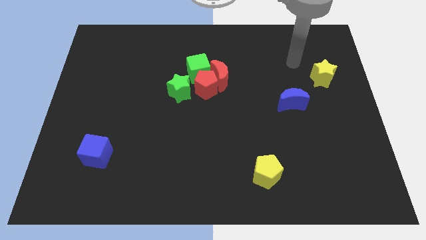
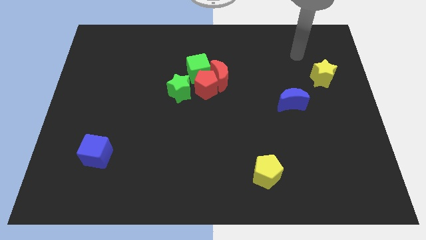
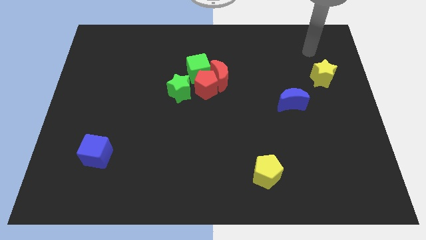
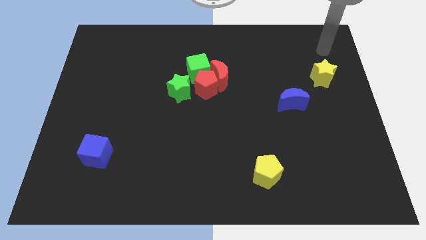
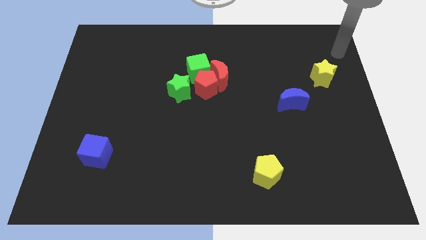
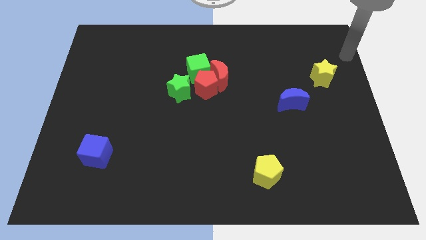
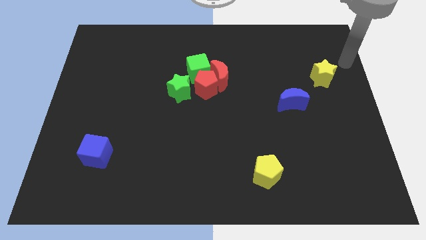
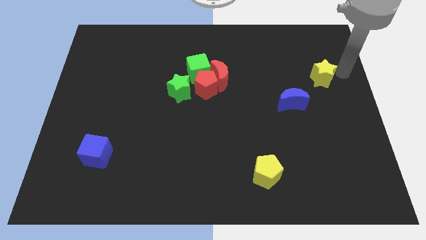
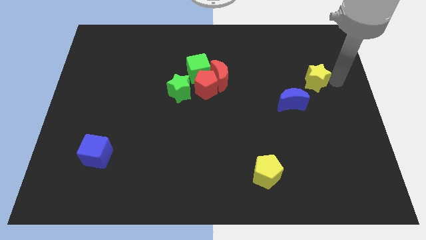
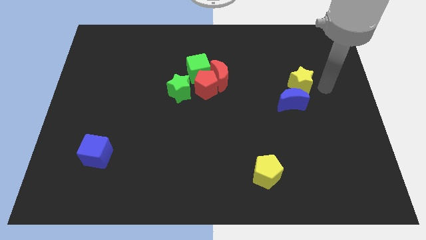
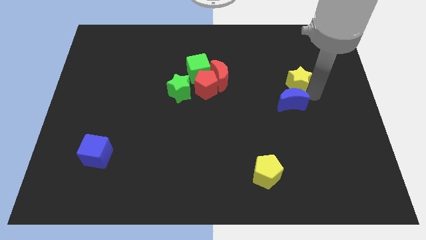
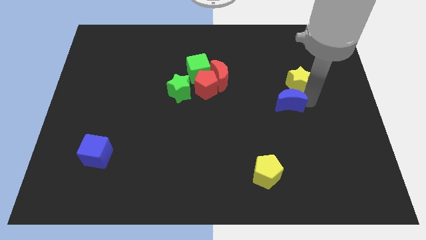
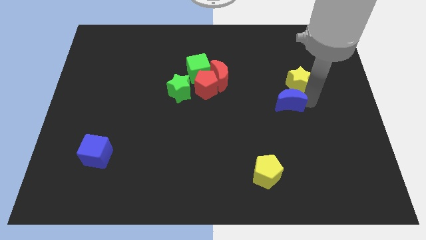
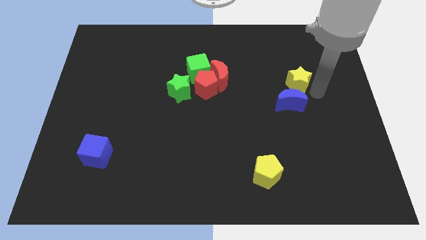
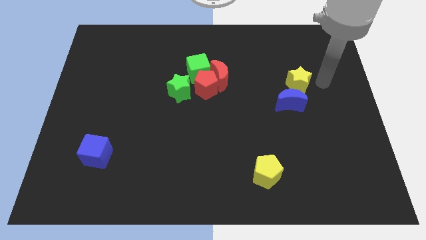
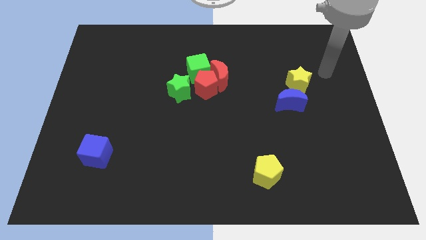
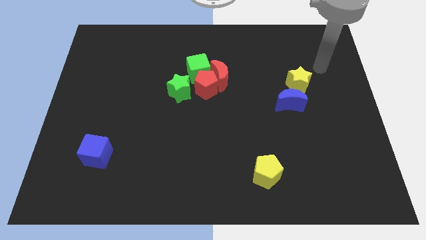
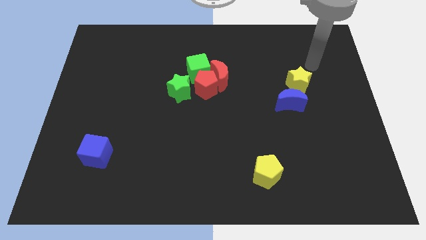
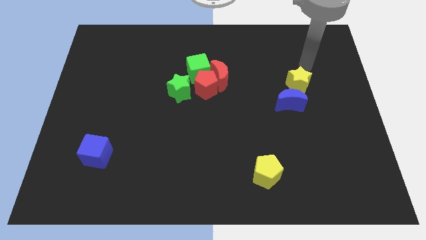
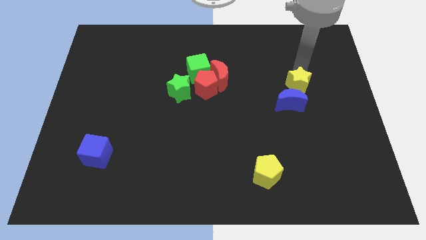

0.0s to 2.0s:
move the yellow star to the top of the blue moon

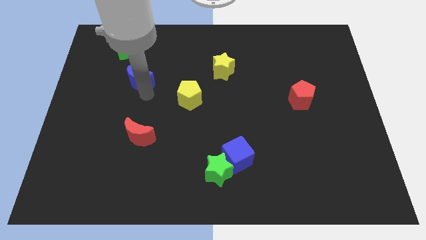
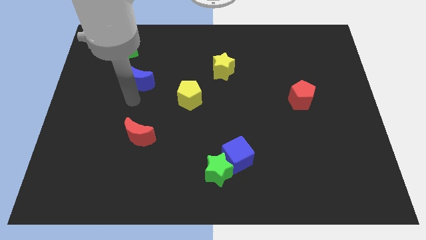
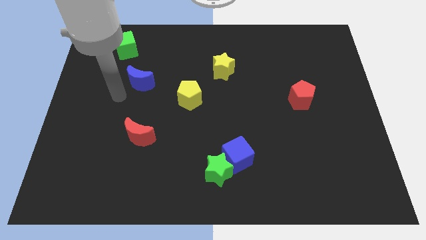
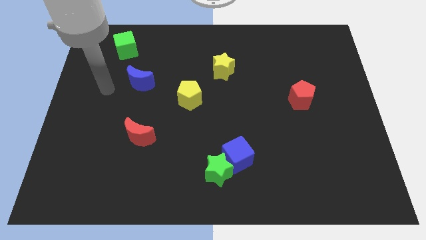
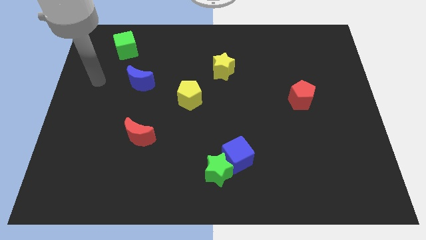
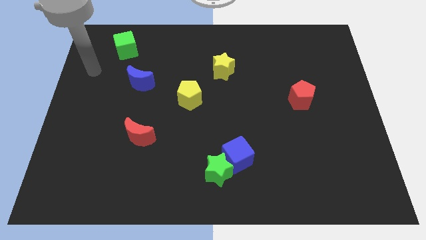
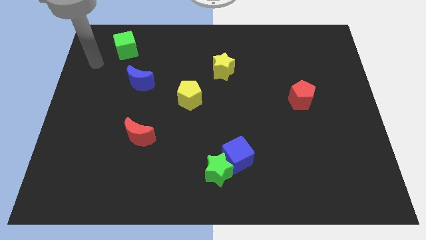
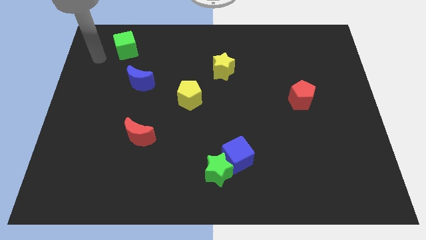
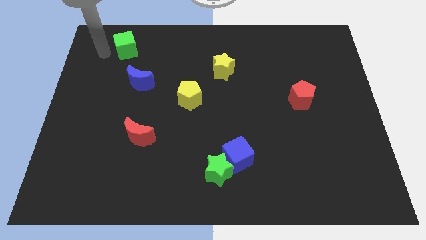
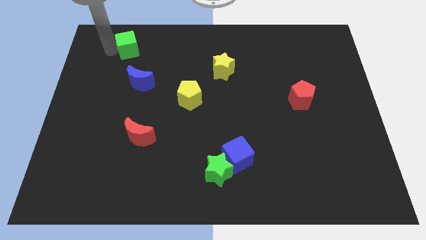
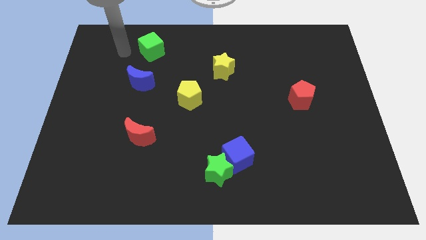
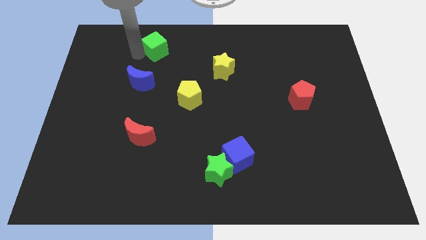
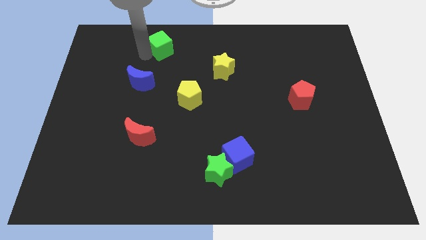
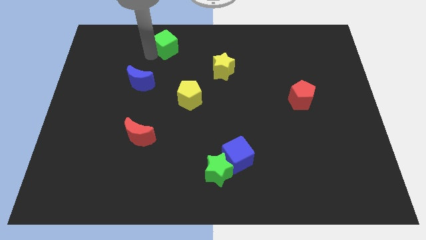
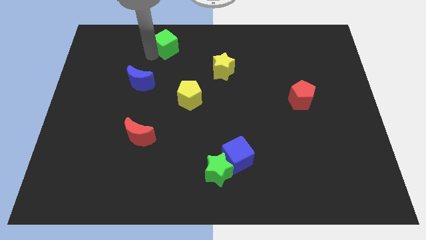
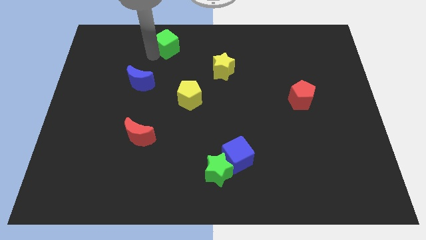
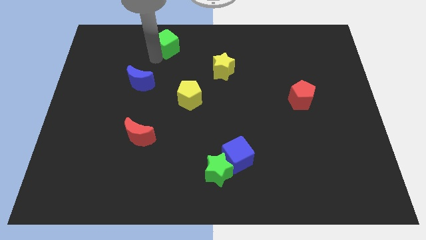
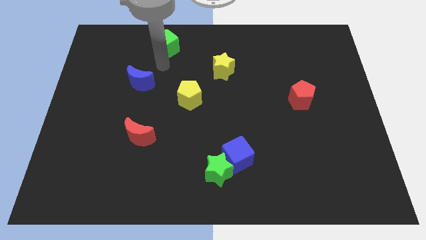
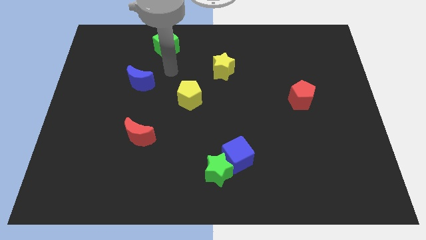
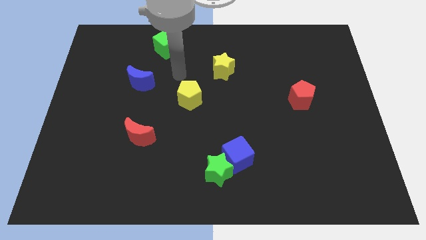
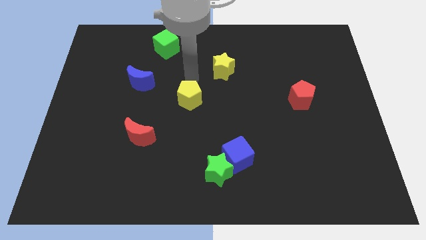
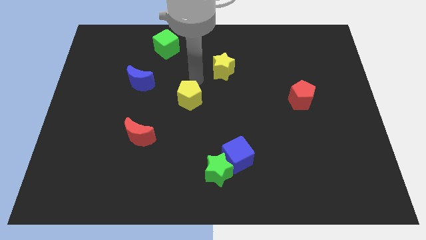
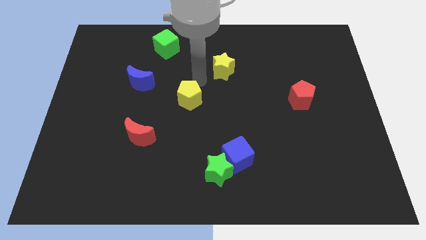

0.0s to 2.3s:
slightly move the green cube to the right

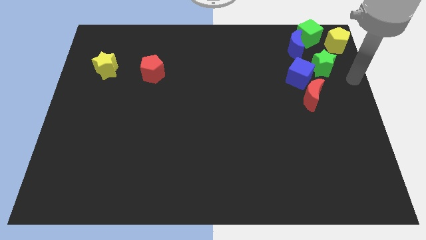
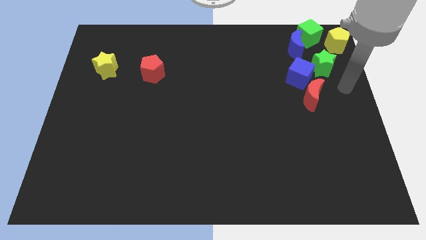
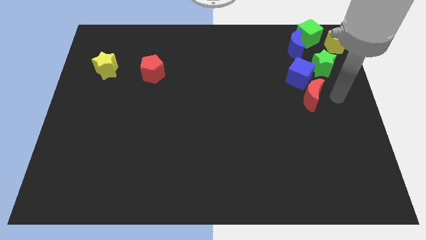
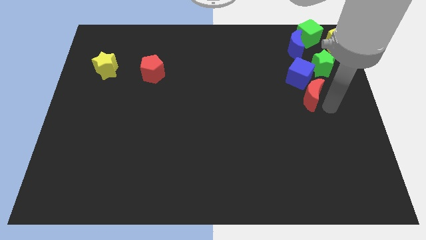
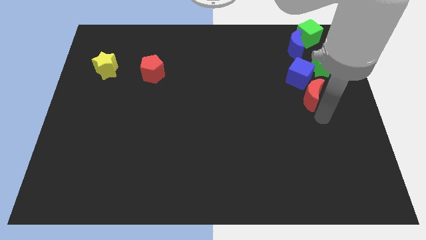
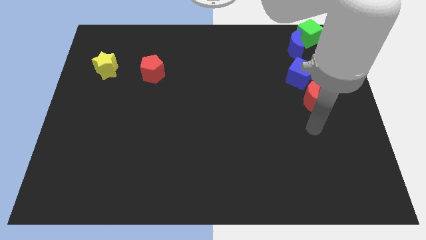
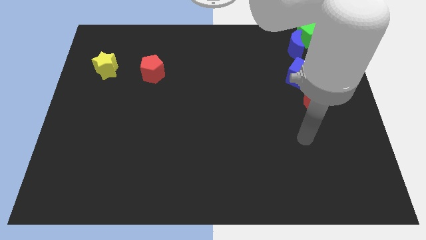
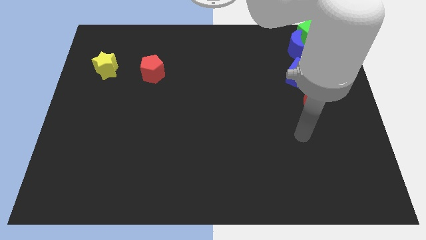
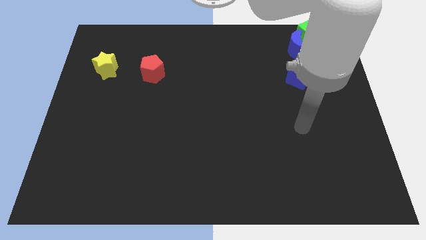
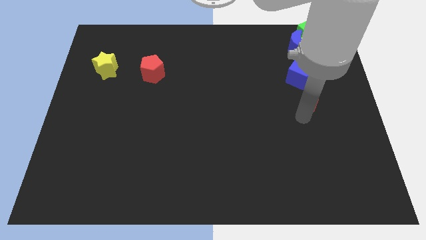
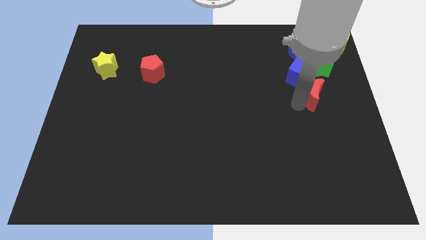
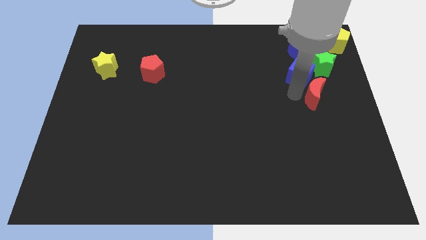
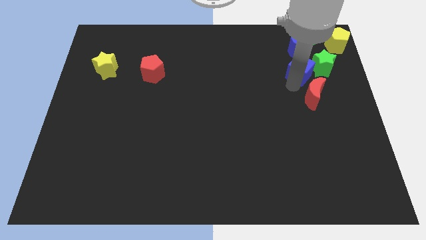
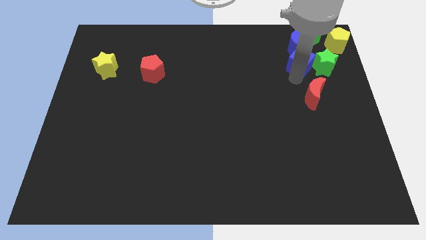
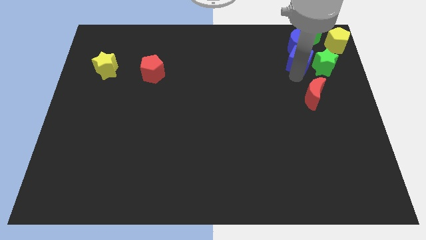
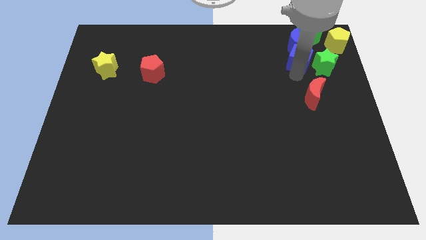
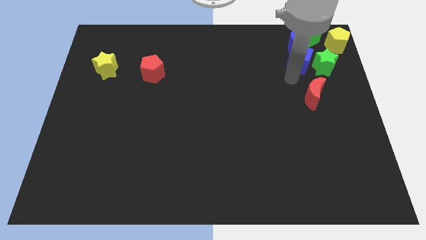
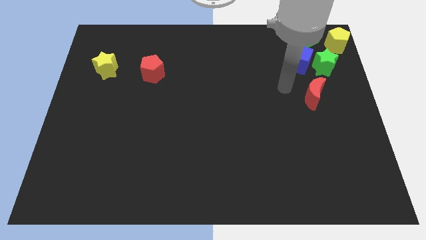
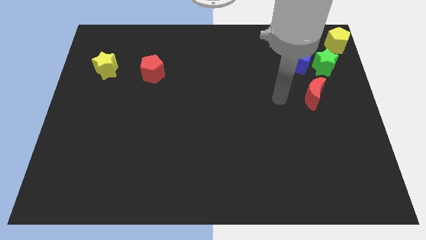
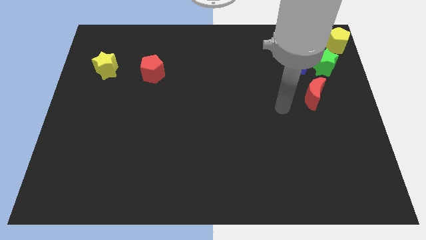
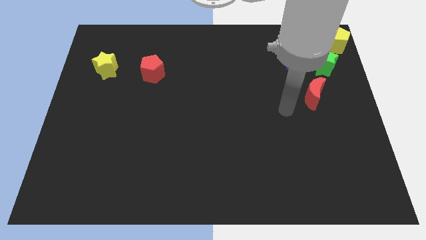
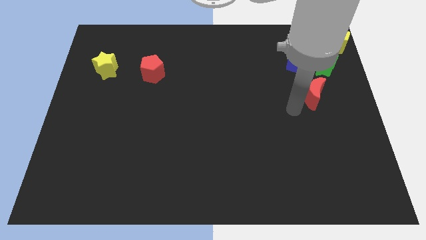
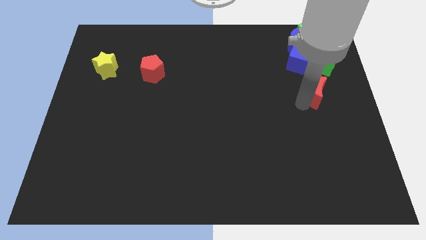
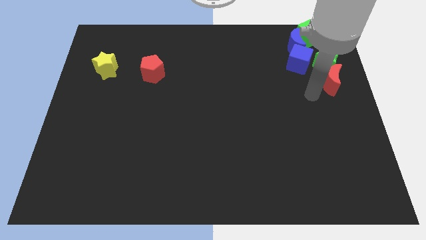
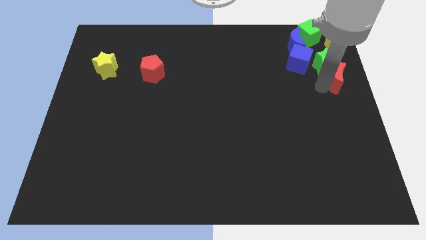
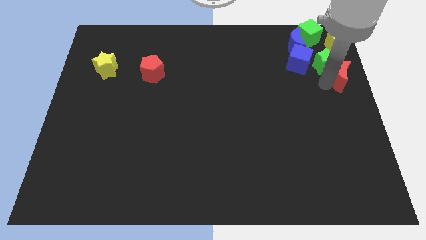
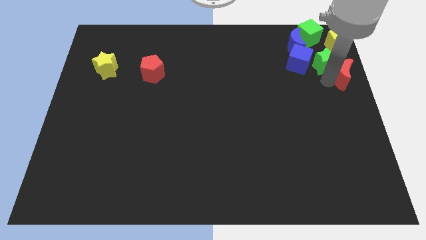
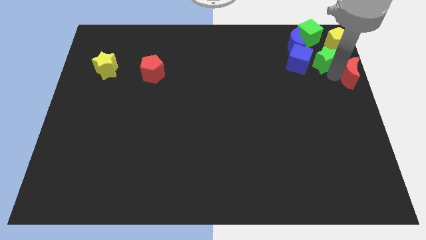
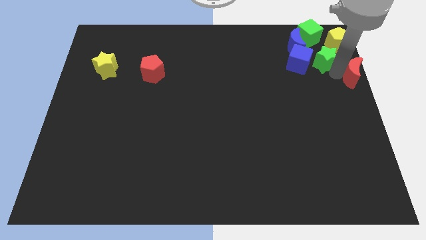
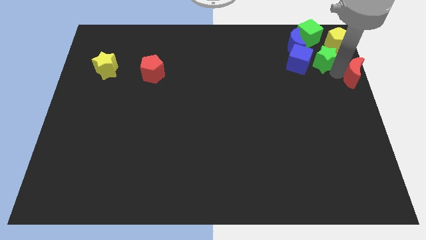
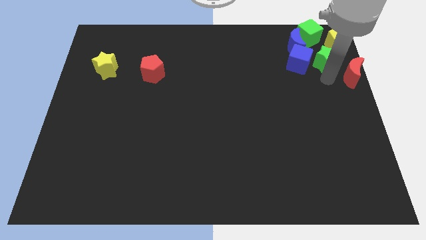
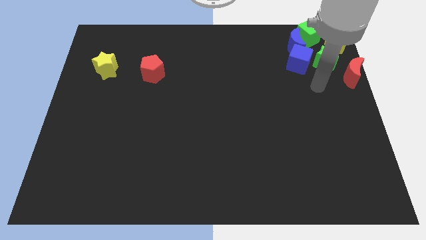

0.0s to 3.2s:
push the blue cube into blue moon and red to the right of green star

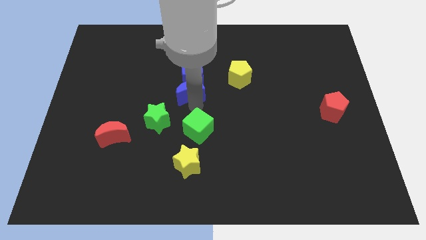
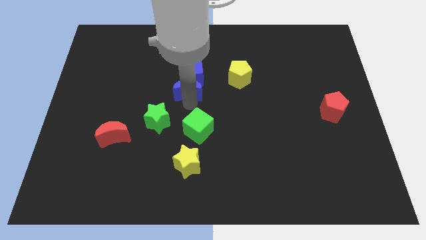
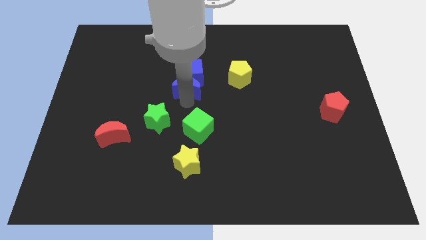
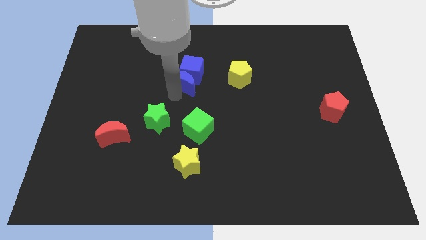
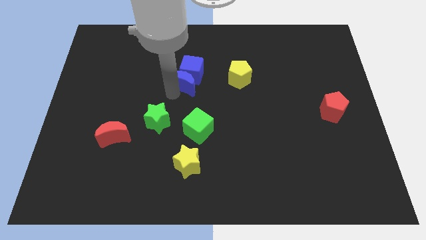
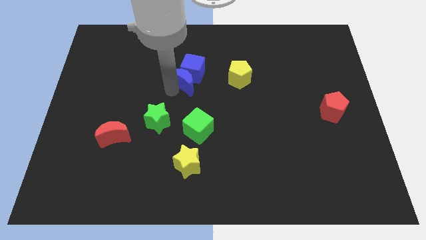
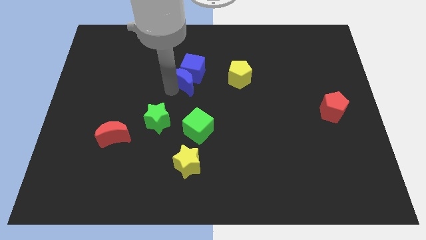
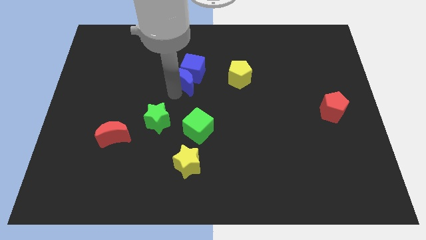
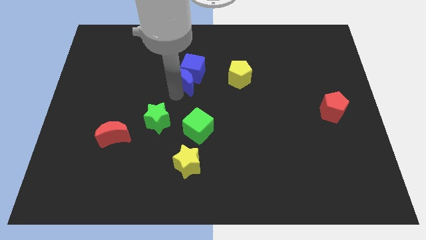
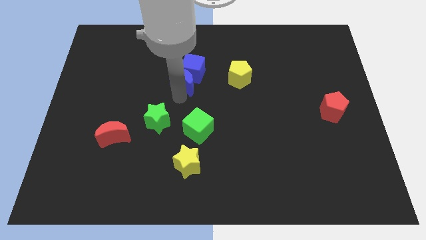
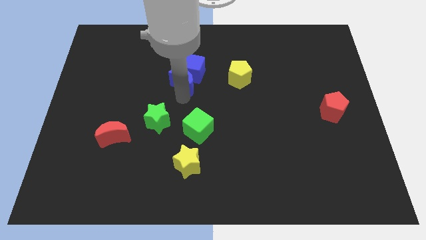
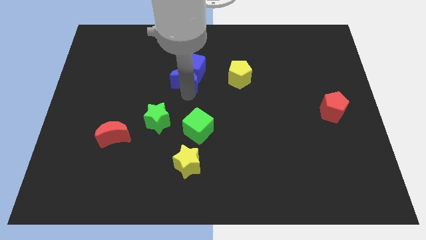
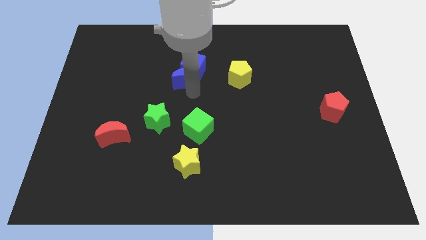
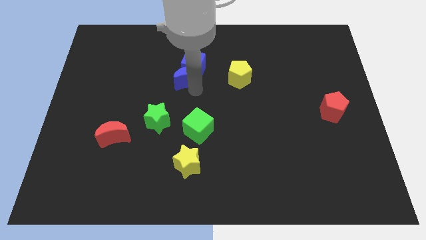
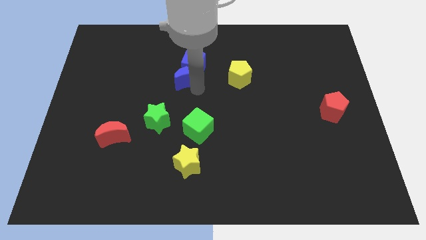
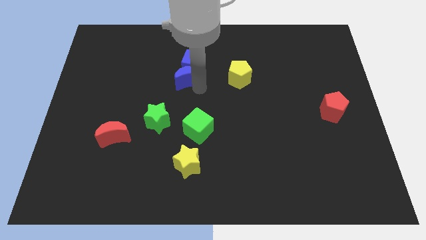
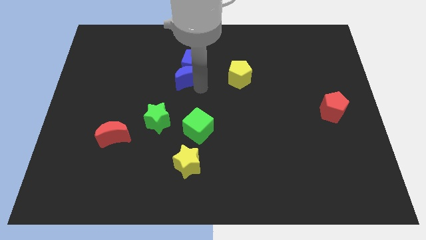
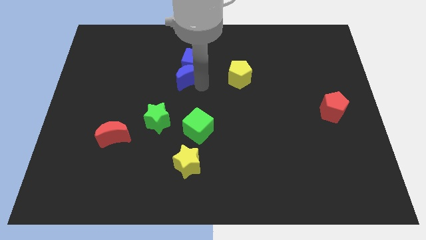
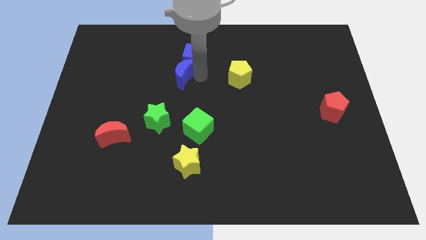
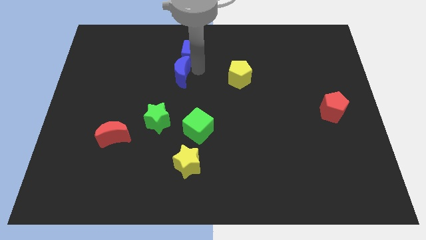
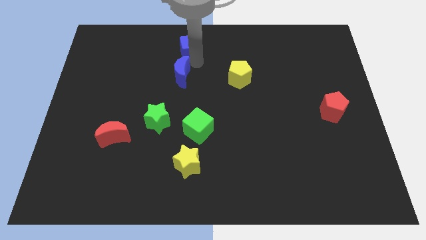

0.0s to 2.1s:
push the blue moon and blue cube together slightly to the top side of the board
